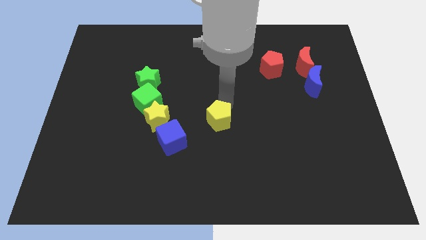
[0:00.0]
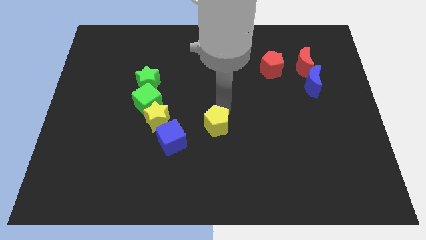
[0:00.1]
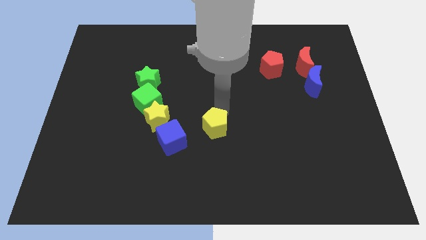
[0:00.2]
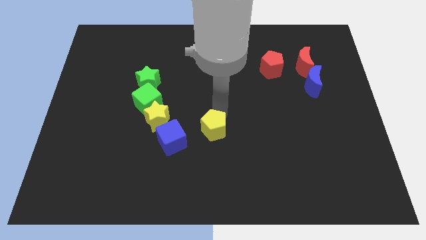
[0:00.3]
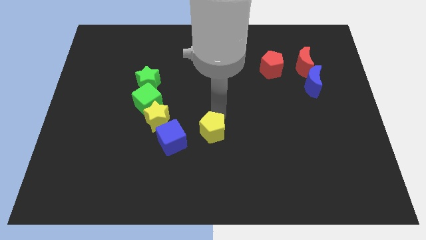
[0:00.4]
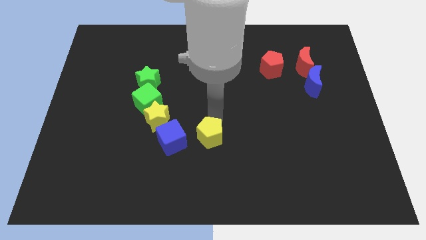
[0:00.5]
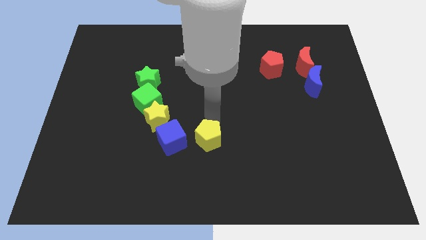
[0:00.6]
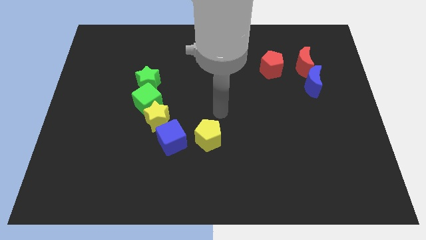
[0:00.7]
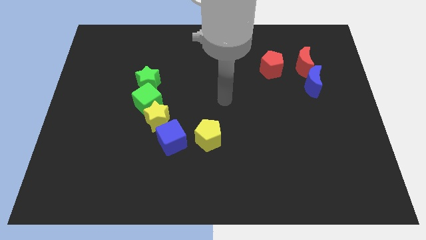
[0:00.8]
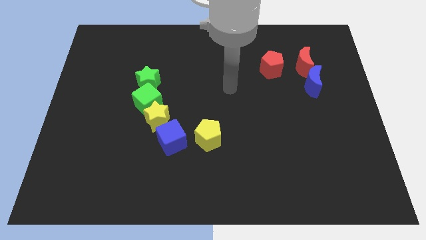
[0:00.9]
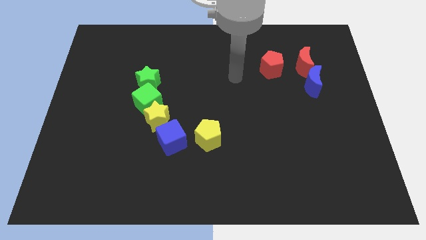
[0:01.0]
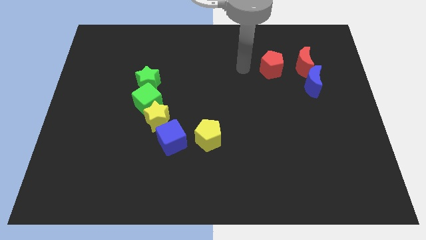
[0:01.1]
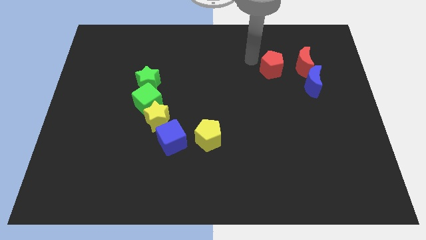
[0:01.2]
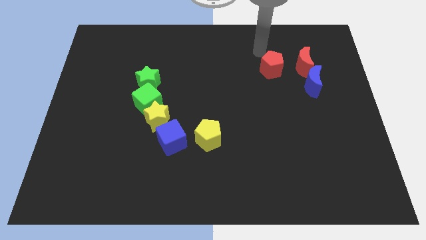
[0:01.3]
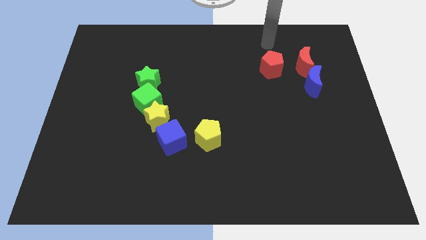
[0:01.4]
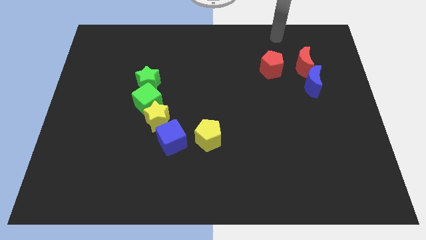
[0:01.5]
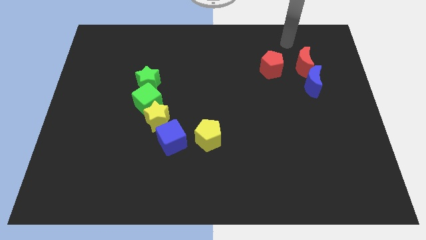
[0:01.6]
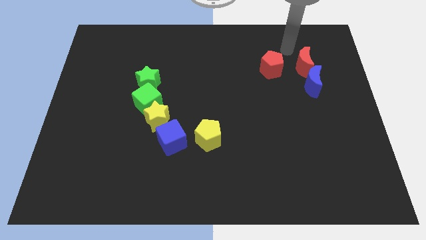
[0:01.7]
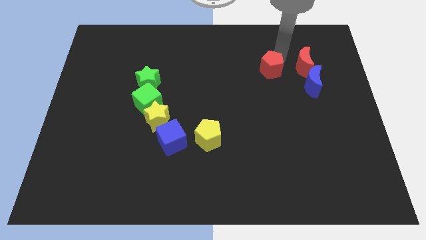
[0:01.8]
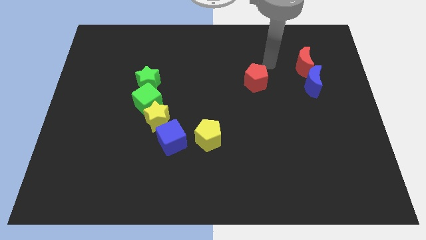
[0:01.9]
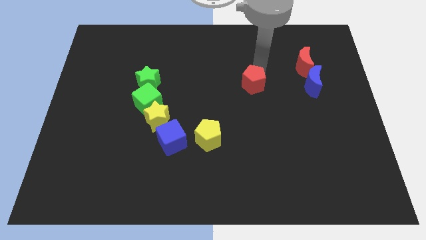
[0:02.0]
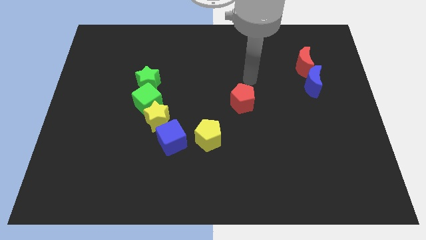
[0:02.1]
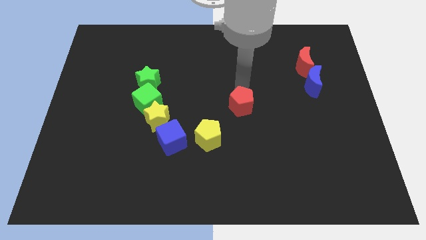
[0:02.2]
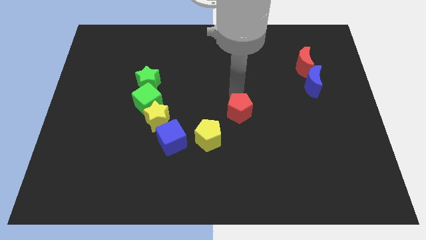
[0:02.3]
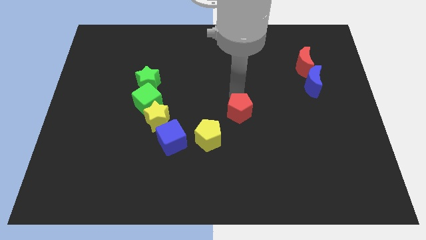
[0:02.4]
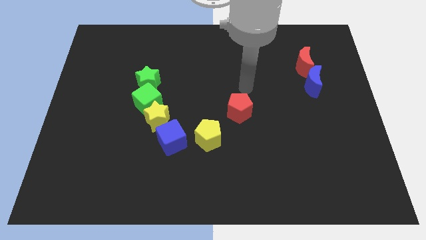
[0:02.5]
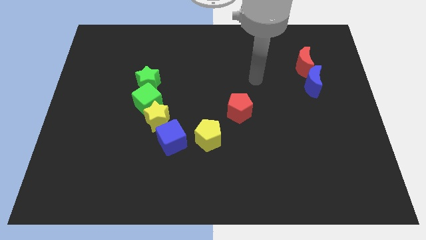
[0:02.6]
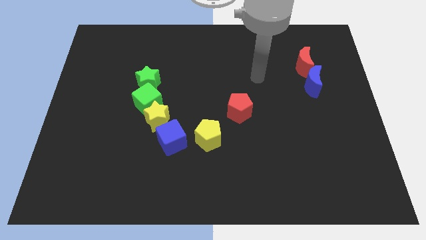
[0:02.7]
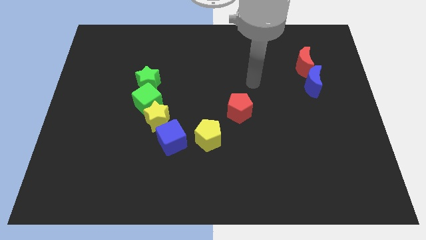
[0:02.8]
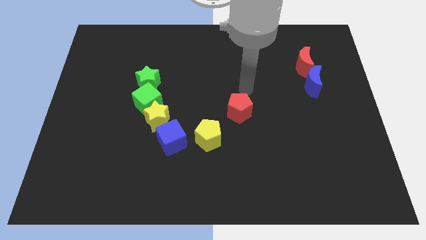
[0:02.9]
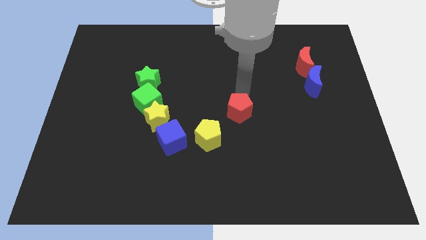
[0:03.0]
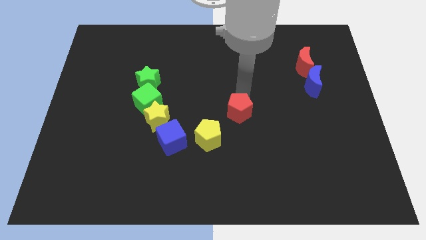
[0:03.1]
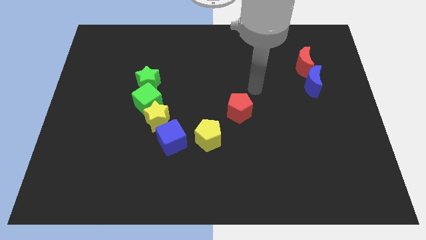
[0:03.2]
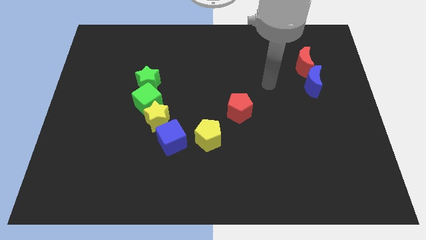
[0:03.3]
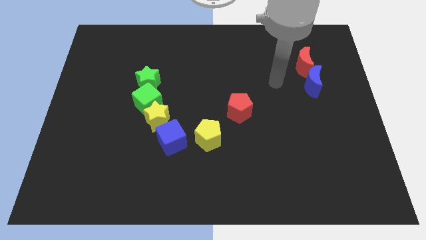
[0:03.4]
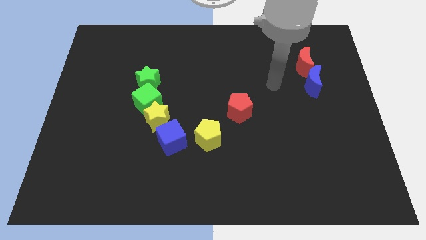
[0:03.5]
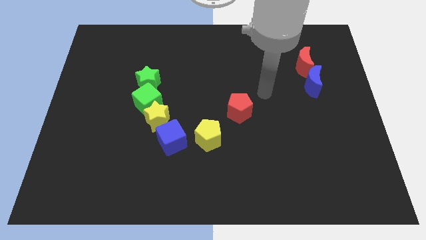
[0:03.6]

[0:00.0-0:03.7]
place the red pentagon towards the center of the board

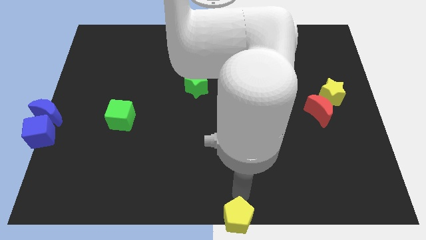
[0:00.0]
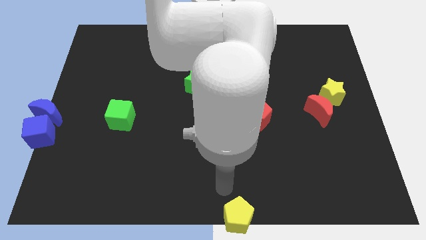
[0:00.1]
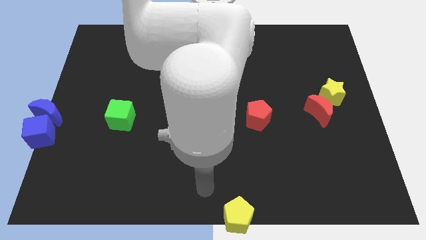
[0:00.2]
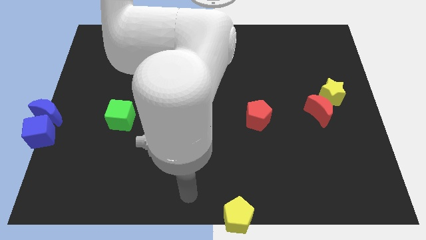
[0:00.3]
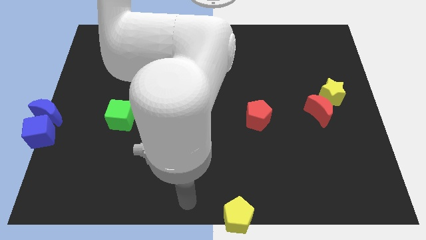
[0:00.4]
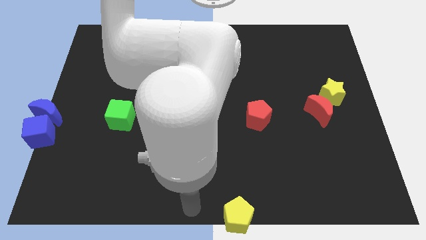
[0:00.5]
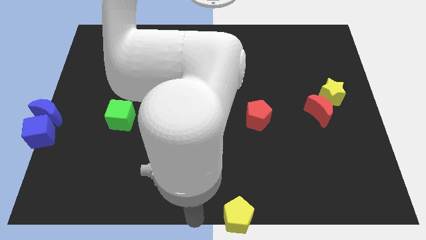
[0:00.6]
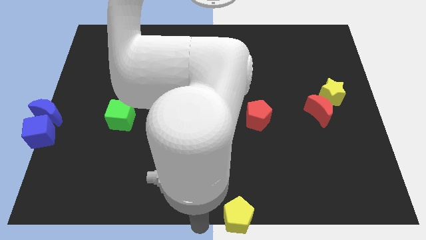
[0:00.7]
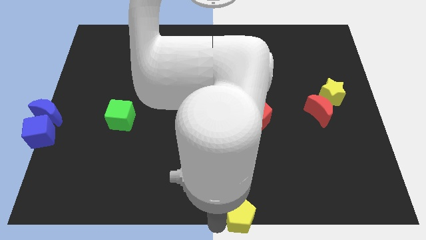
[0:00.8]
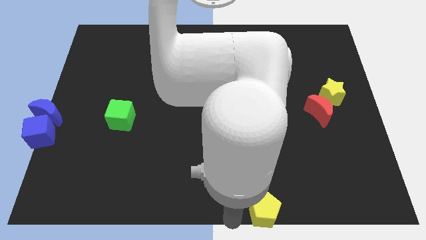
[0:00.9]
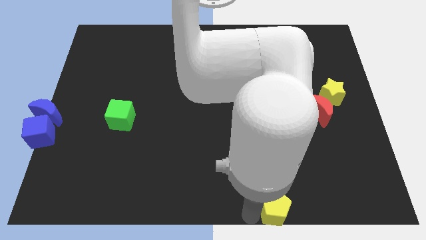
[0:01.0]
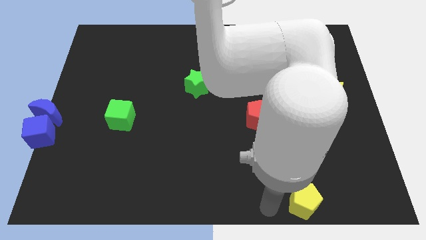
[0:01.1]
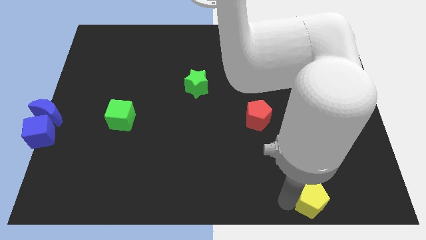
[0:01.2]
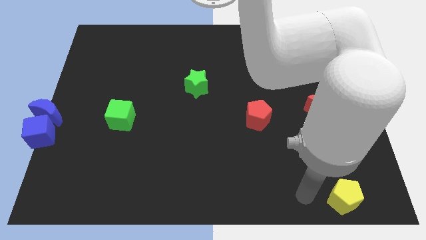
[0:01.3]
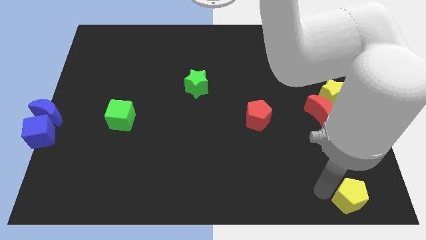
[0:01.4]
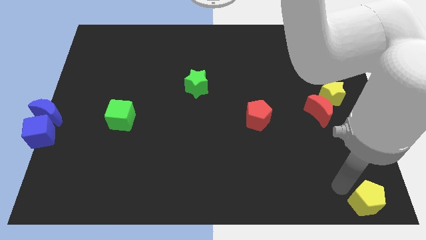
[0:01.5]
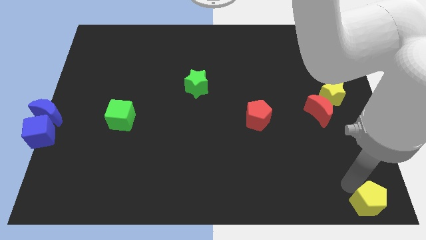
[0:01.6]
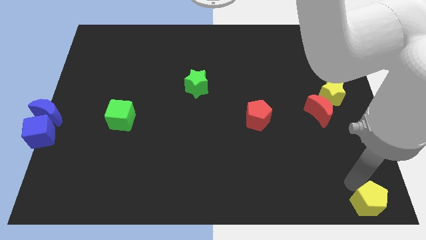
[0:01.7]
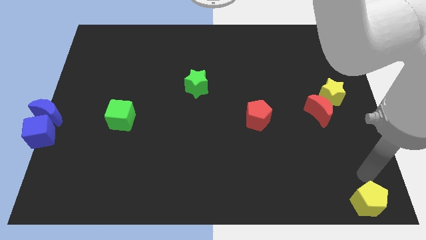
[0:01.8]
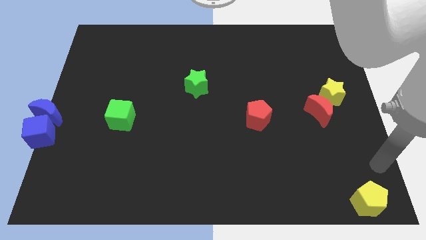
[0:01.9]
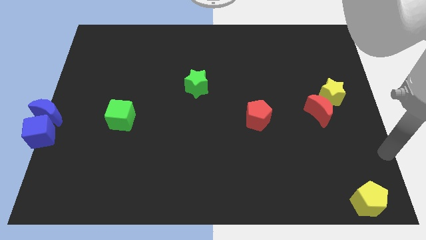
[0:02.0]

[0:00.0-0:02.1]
move yellow pentagon to the bottom right

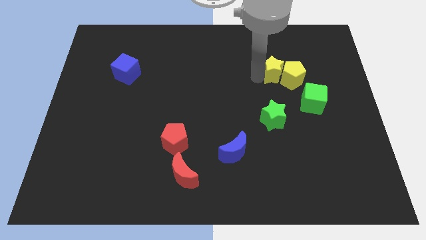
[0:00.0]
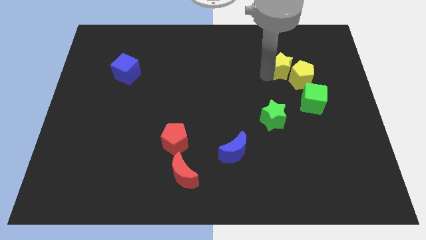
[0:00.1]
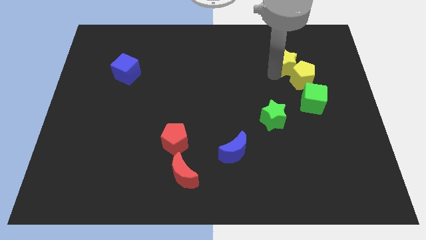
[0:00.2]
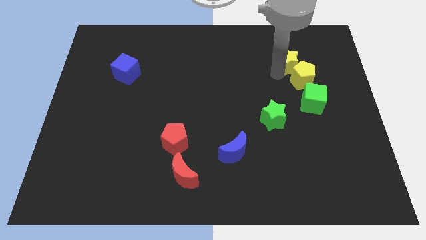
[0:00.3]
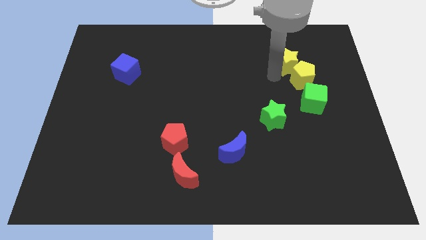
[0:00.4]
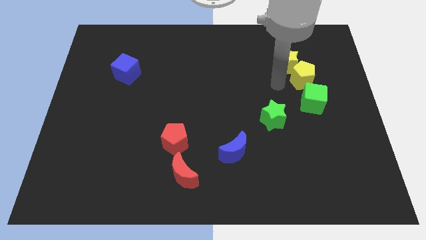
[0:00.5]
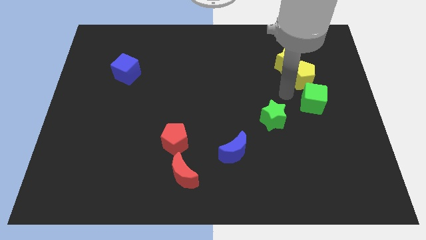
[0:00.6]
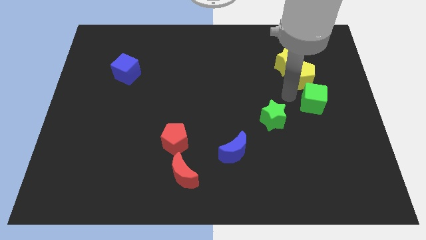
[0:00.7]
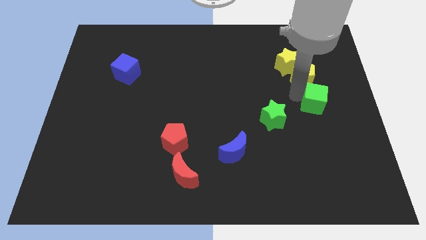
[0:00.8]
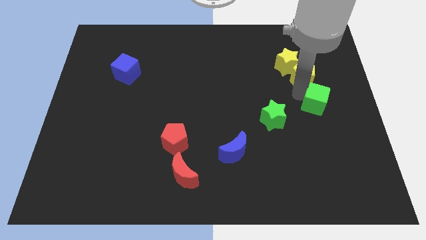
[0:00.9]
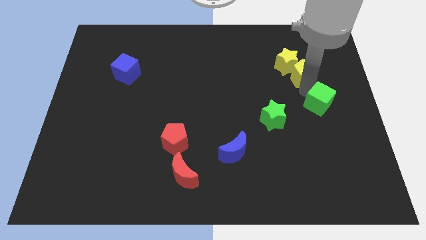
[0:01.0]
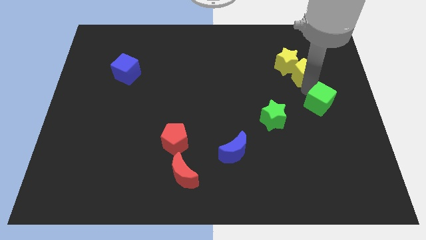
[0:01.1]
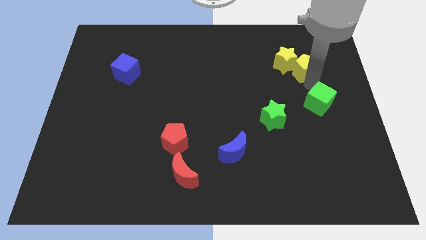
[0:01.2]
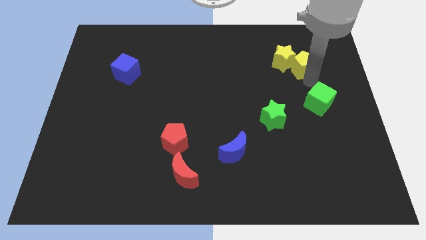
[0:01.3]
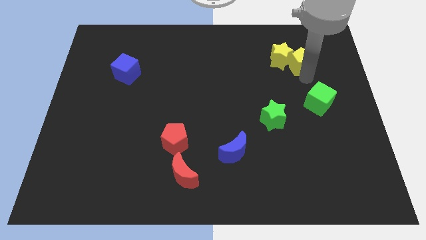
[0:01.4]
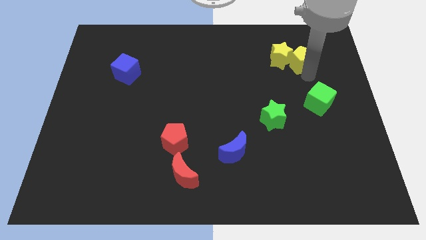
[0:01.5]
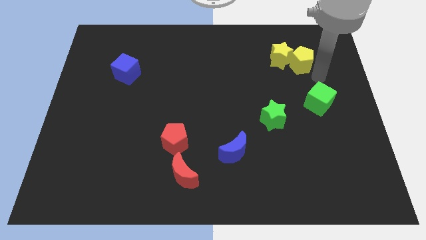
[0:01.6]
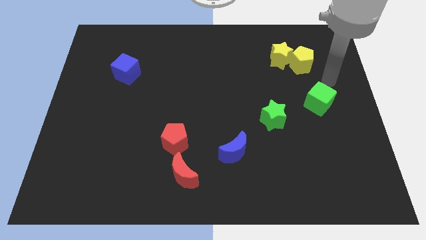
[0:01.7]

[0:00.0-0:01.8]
move the yellow star to the left of the yellow pentagon

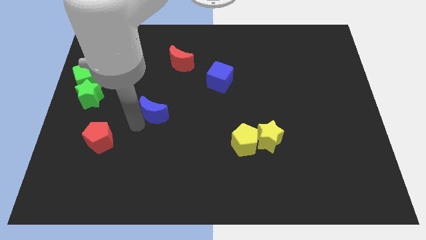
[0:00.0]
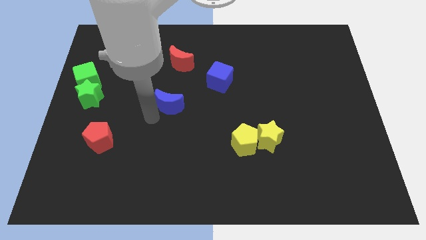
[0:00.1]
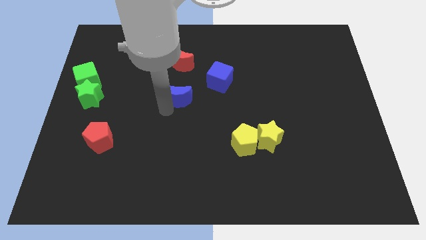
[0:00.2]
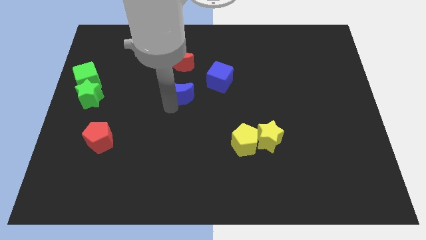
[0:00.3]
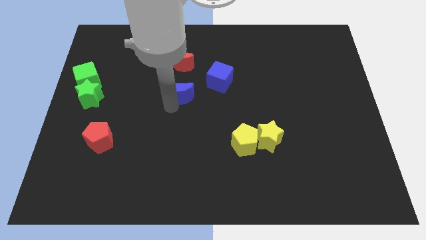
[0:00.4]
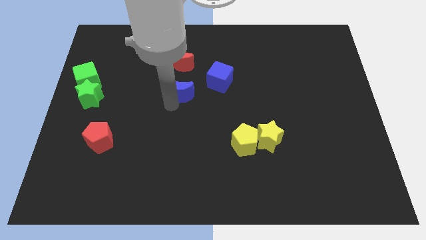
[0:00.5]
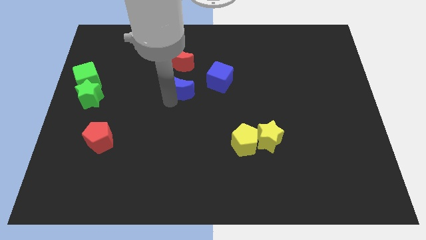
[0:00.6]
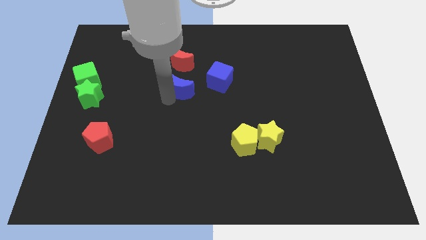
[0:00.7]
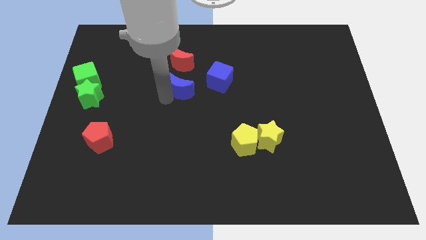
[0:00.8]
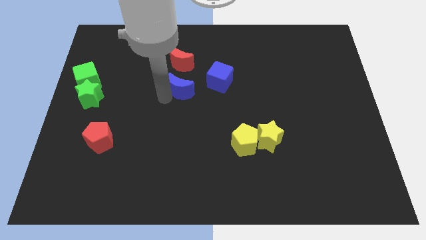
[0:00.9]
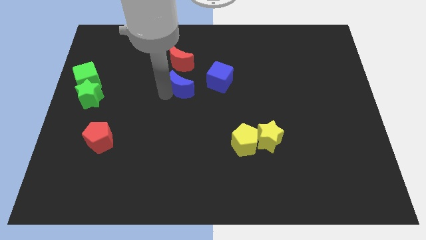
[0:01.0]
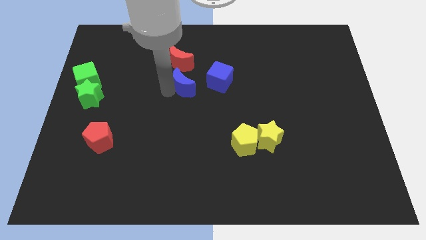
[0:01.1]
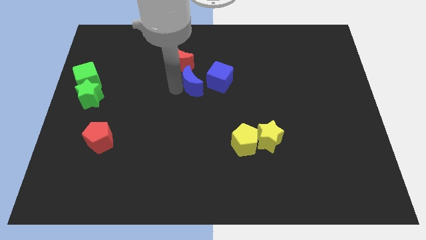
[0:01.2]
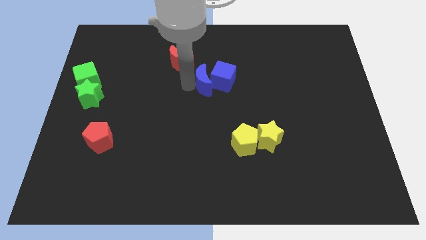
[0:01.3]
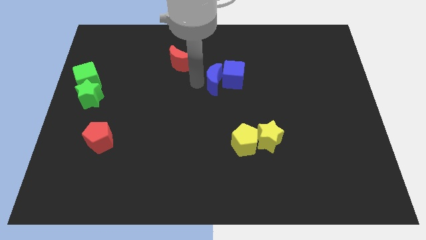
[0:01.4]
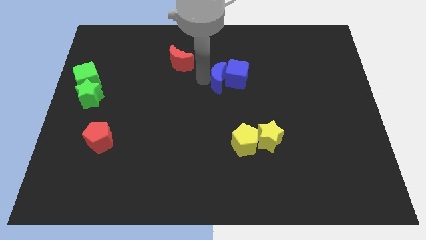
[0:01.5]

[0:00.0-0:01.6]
place the blue moon above the yellow pentagon
